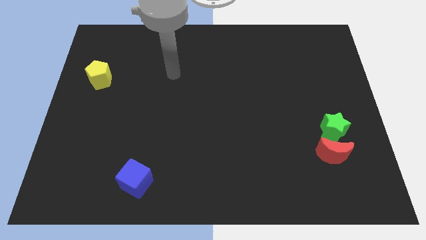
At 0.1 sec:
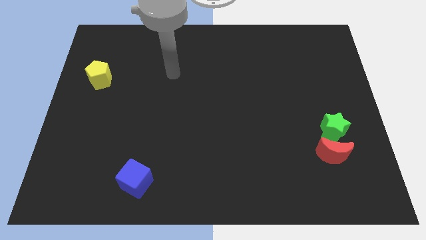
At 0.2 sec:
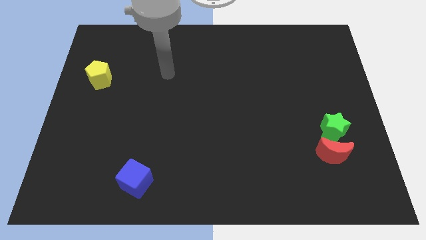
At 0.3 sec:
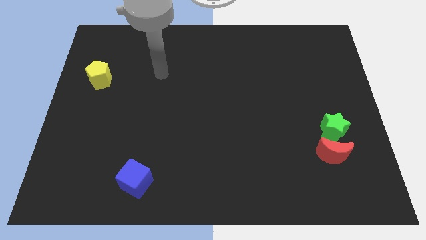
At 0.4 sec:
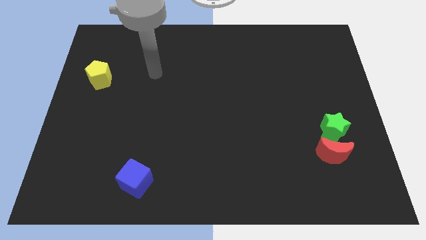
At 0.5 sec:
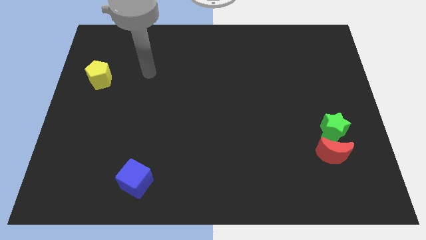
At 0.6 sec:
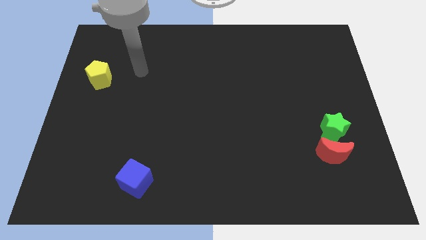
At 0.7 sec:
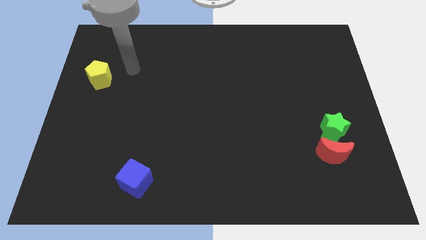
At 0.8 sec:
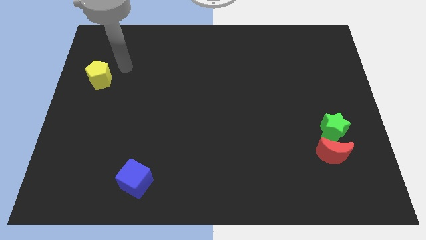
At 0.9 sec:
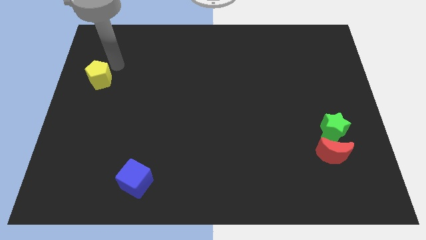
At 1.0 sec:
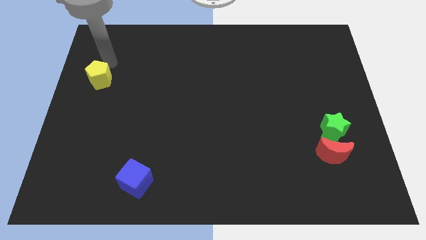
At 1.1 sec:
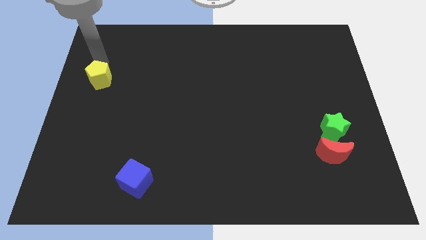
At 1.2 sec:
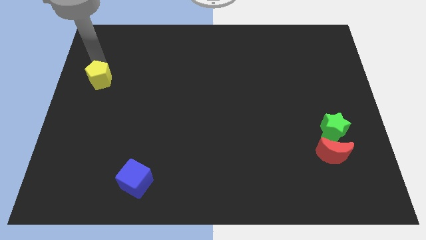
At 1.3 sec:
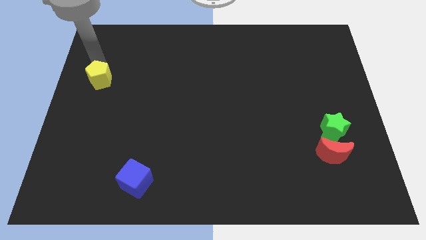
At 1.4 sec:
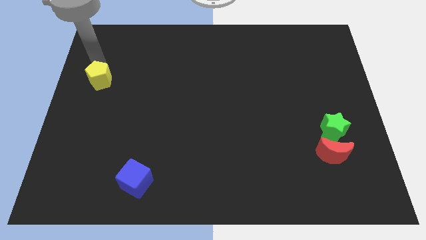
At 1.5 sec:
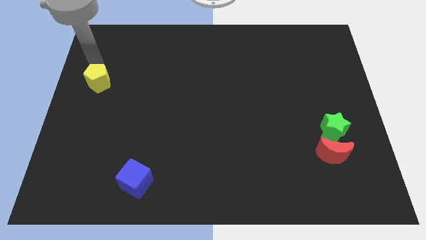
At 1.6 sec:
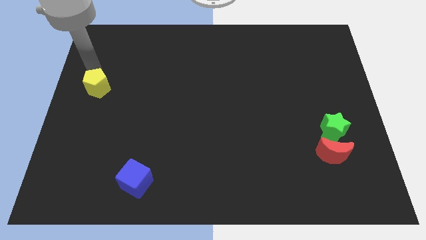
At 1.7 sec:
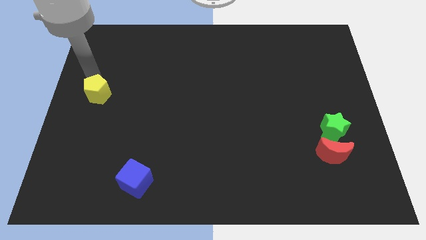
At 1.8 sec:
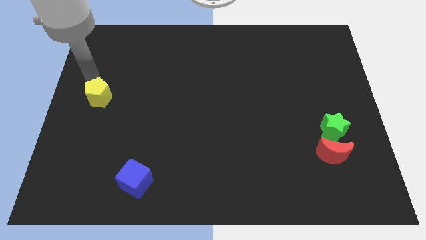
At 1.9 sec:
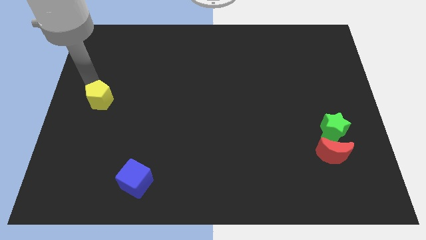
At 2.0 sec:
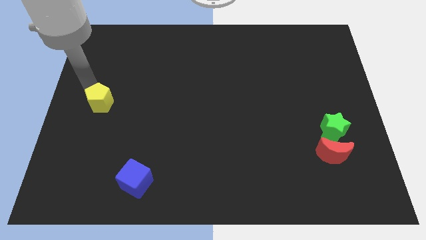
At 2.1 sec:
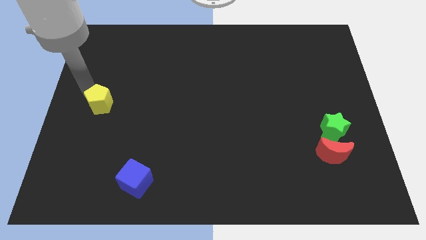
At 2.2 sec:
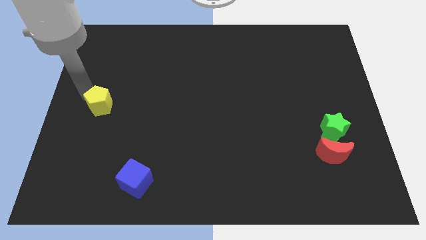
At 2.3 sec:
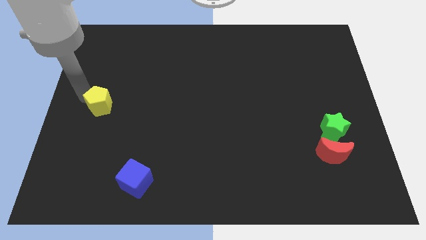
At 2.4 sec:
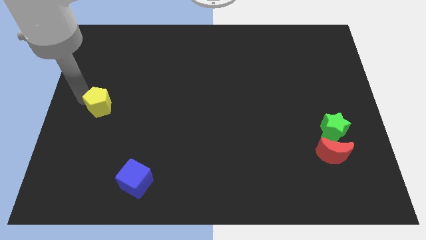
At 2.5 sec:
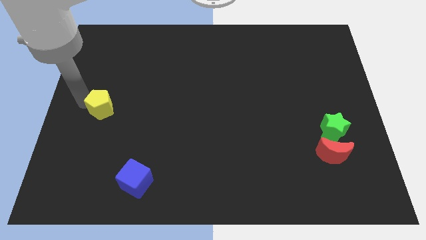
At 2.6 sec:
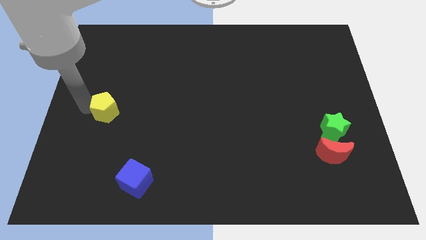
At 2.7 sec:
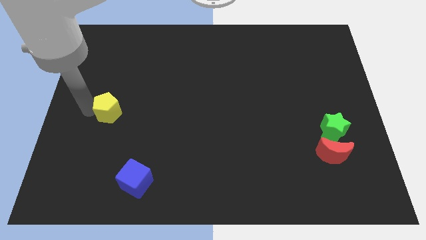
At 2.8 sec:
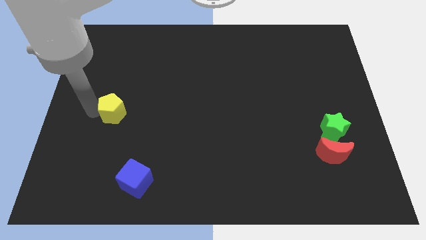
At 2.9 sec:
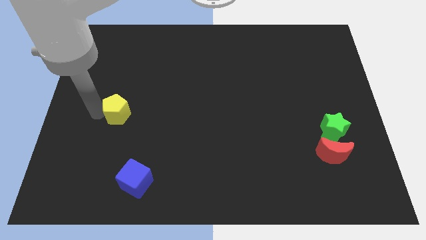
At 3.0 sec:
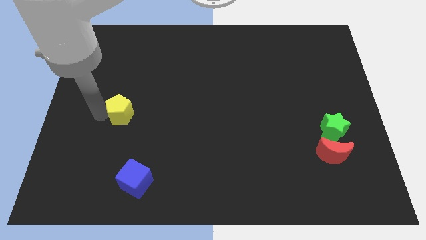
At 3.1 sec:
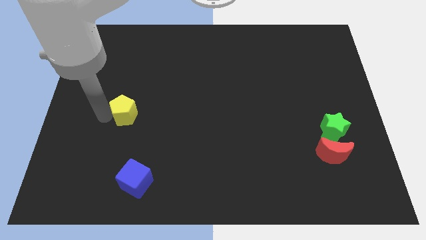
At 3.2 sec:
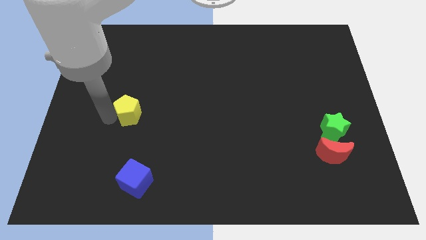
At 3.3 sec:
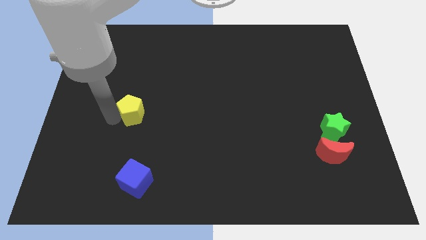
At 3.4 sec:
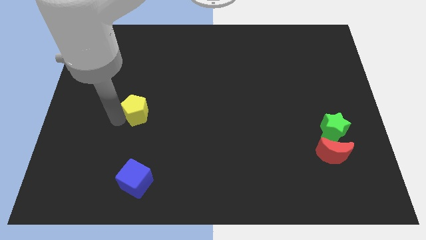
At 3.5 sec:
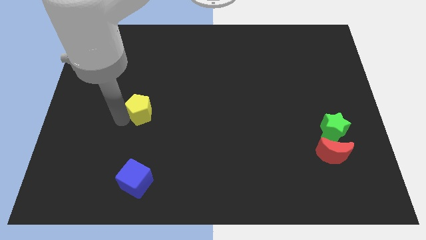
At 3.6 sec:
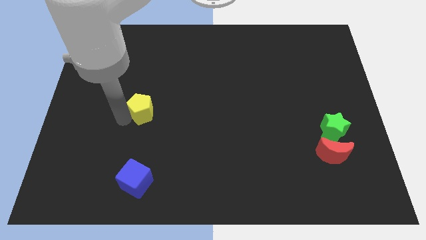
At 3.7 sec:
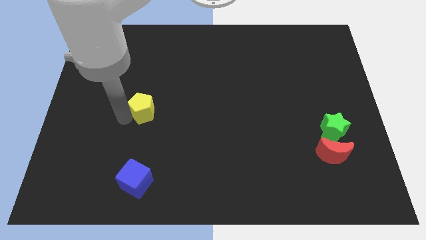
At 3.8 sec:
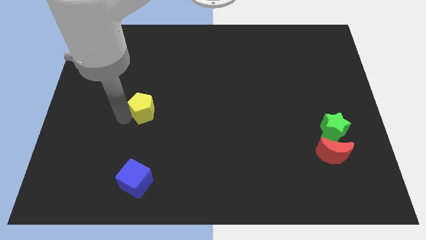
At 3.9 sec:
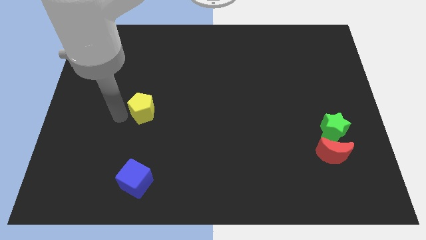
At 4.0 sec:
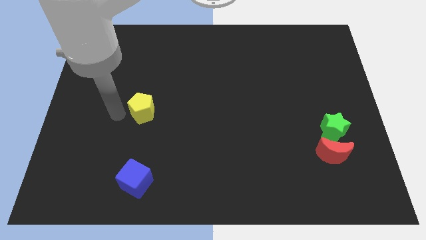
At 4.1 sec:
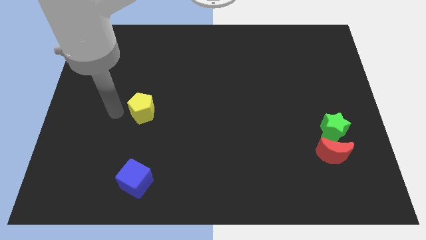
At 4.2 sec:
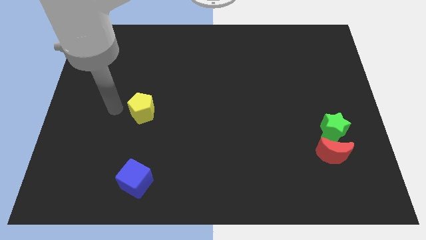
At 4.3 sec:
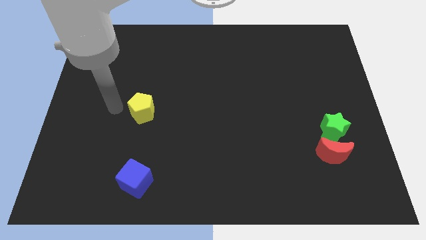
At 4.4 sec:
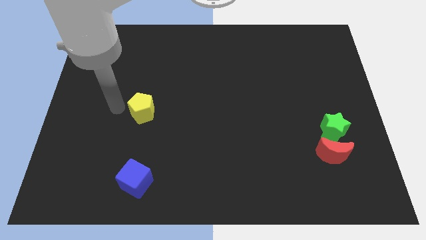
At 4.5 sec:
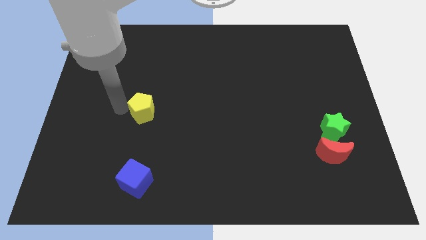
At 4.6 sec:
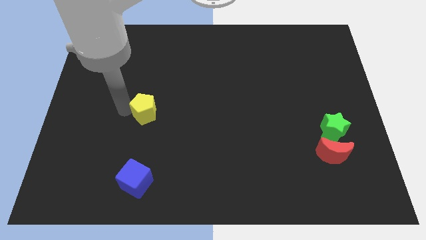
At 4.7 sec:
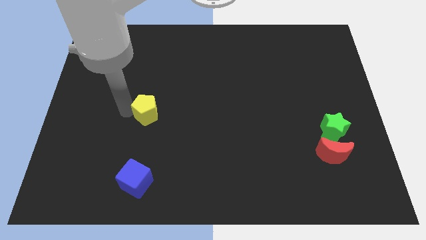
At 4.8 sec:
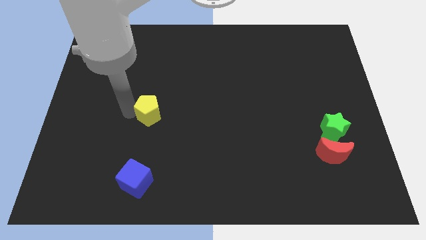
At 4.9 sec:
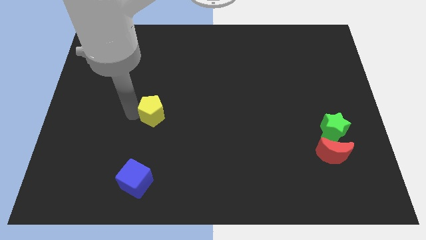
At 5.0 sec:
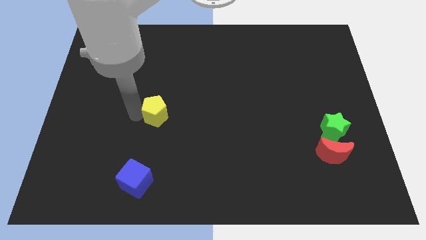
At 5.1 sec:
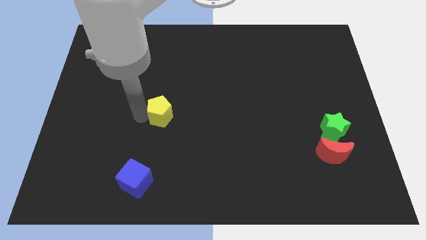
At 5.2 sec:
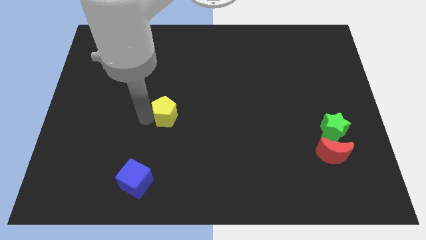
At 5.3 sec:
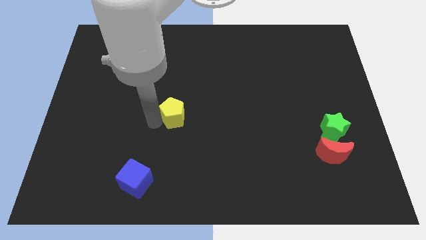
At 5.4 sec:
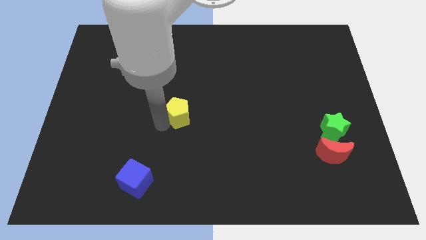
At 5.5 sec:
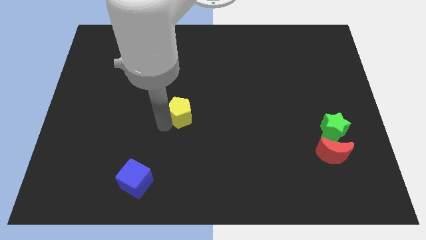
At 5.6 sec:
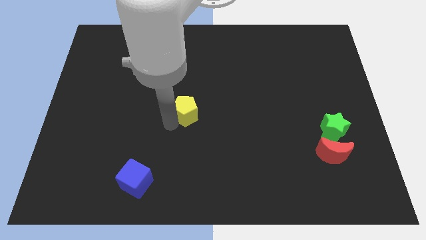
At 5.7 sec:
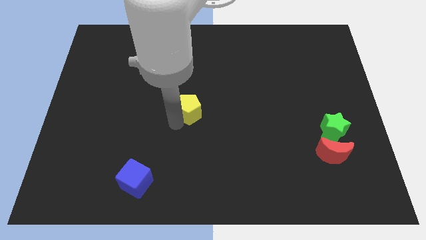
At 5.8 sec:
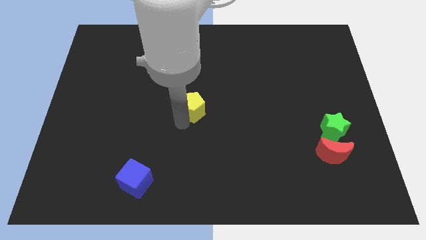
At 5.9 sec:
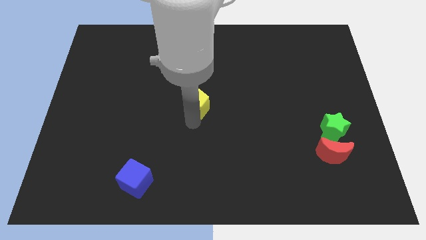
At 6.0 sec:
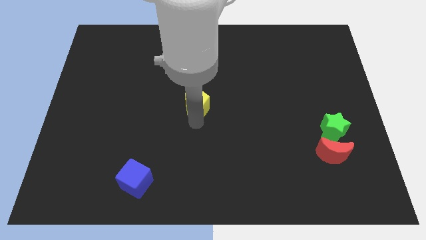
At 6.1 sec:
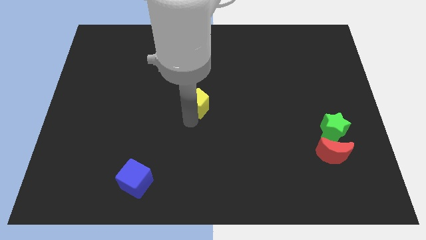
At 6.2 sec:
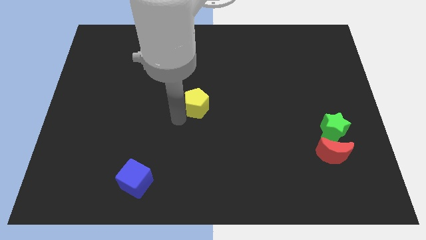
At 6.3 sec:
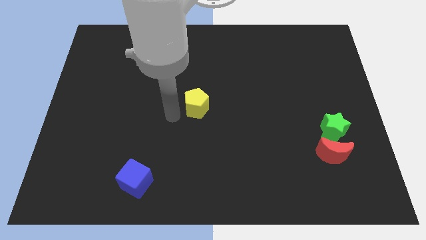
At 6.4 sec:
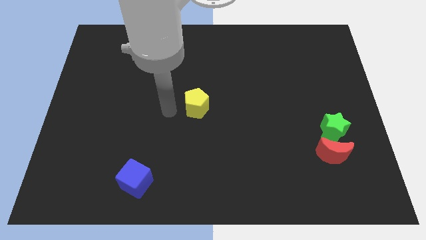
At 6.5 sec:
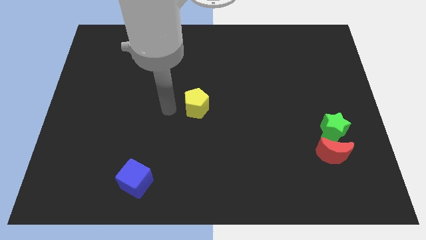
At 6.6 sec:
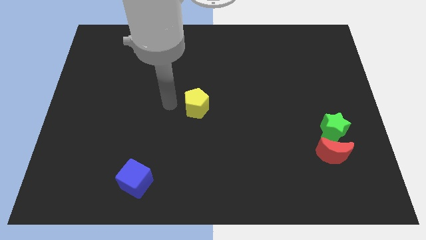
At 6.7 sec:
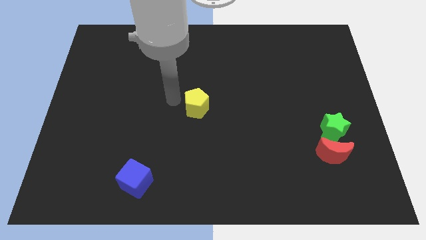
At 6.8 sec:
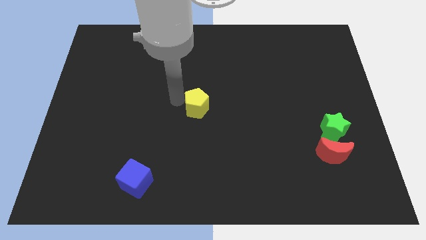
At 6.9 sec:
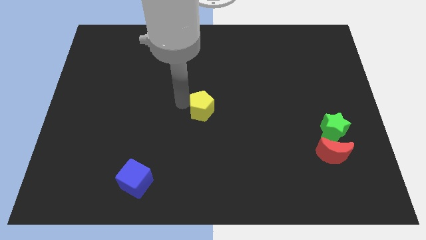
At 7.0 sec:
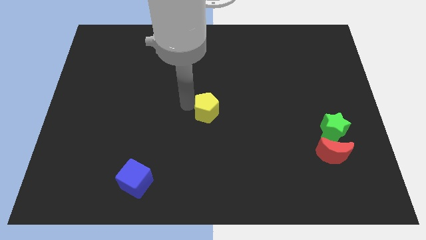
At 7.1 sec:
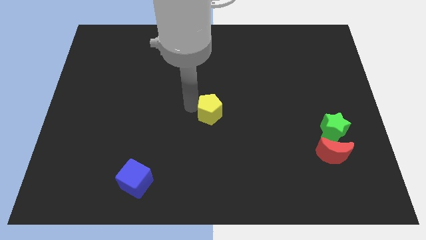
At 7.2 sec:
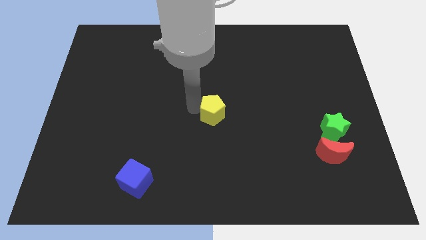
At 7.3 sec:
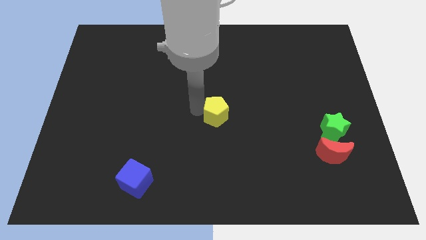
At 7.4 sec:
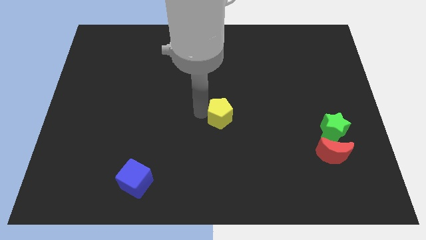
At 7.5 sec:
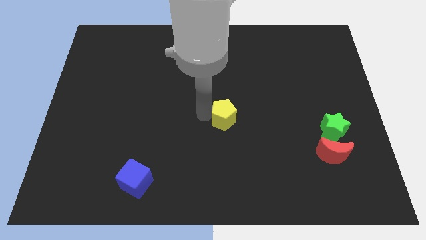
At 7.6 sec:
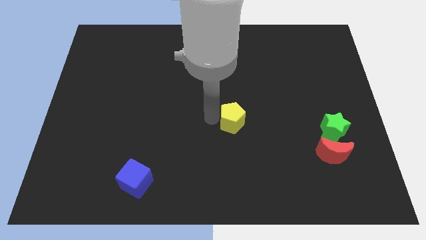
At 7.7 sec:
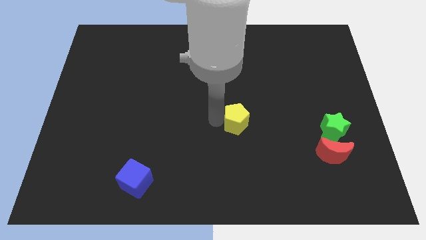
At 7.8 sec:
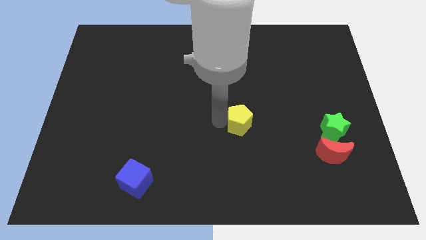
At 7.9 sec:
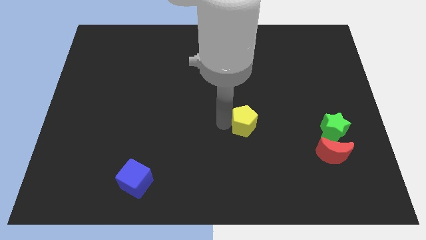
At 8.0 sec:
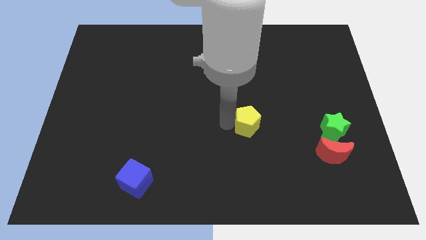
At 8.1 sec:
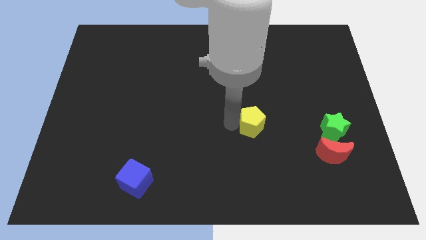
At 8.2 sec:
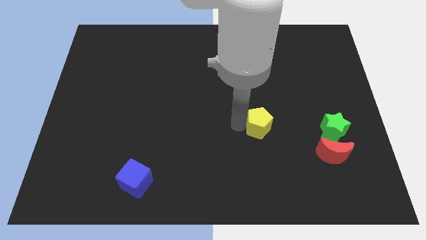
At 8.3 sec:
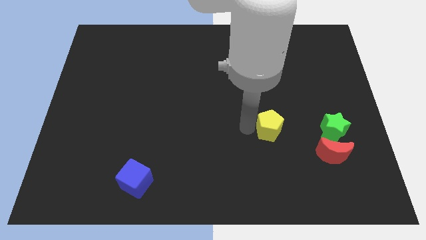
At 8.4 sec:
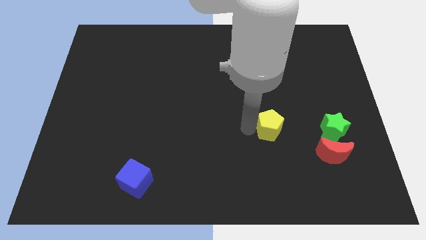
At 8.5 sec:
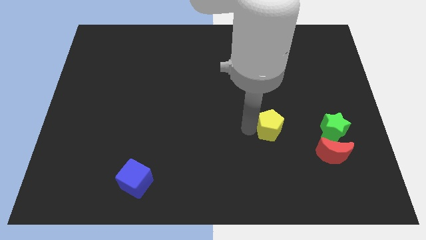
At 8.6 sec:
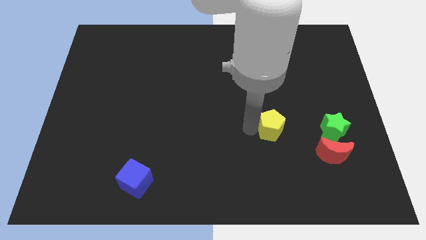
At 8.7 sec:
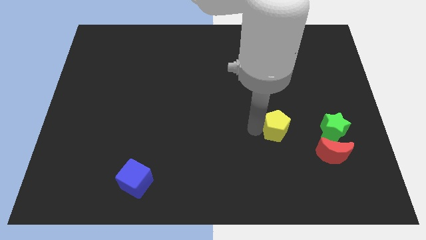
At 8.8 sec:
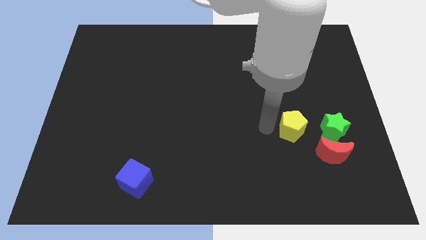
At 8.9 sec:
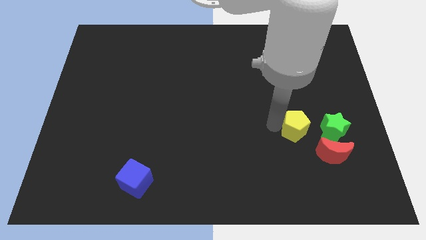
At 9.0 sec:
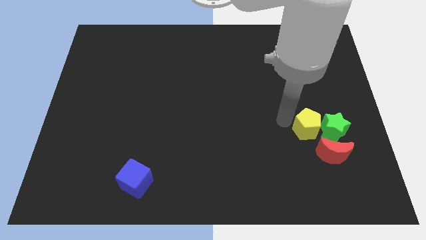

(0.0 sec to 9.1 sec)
push the pentagon close to the green block
